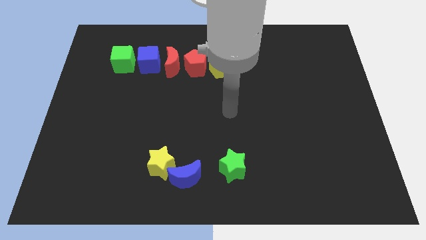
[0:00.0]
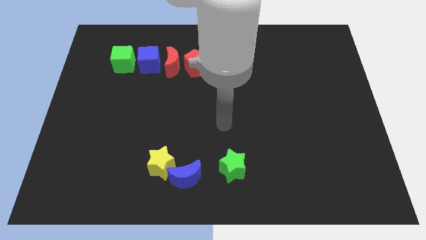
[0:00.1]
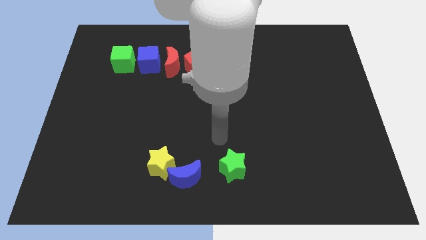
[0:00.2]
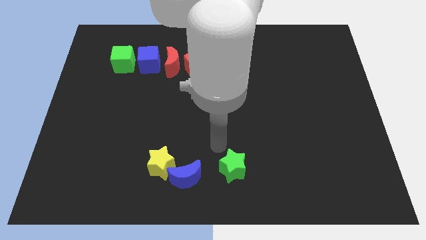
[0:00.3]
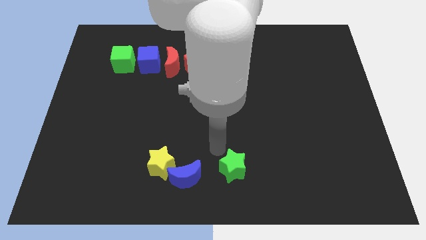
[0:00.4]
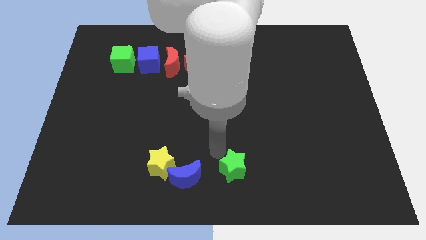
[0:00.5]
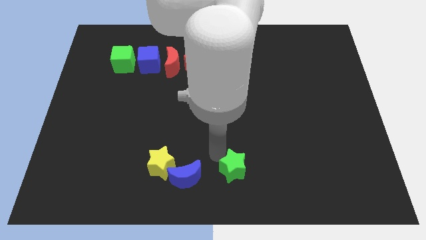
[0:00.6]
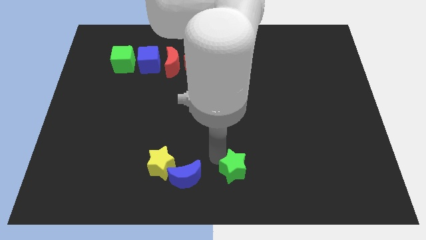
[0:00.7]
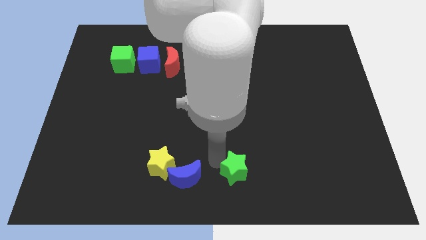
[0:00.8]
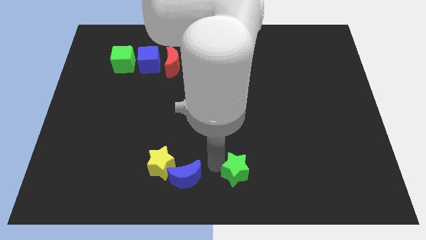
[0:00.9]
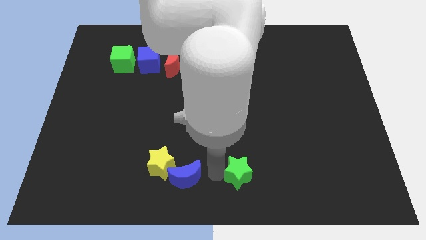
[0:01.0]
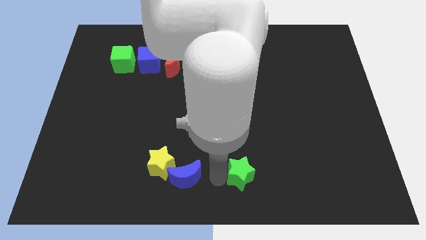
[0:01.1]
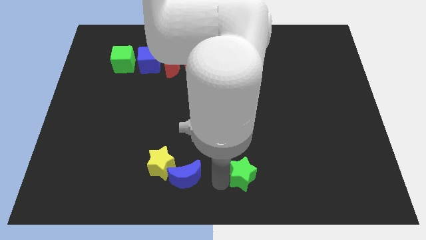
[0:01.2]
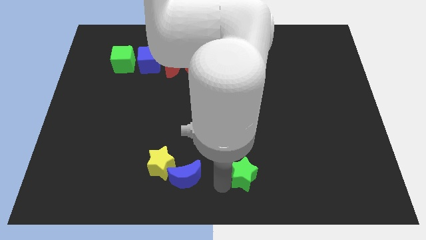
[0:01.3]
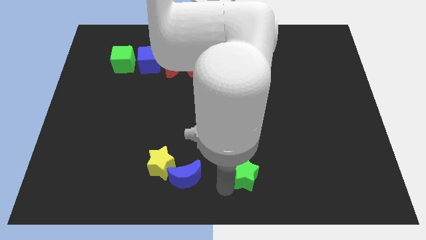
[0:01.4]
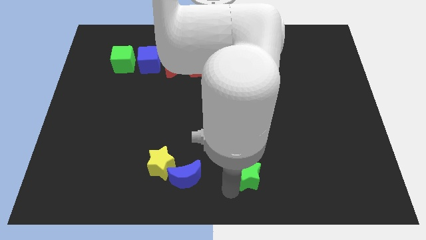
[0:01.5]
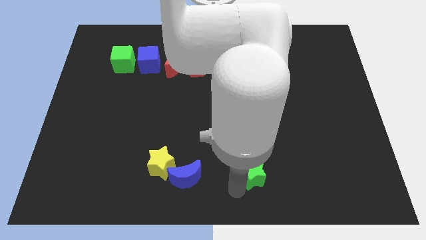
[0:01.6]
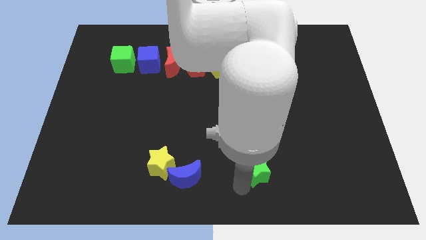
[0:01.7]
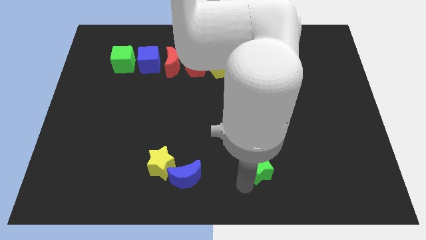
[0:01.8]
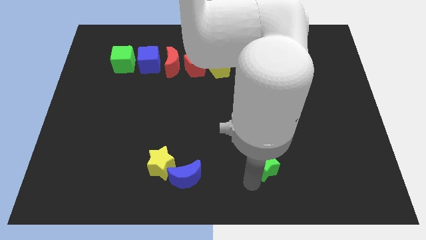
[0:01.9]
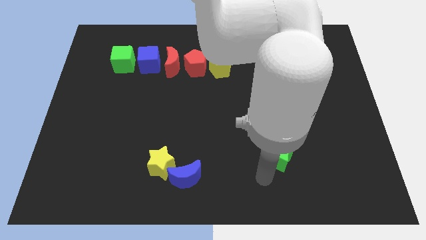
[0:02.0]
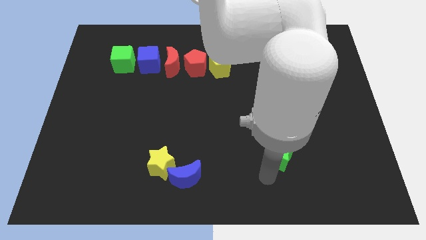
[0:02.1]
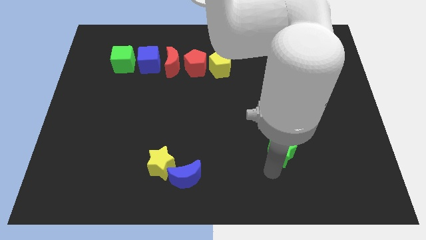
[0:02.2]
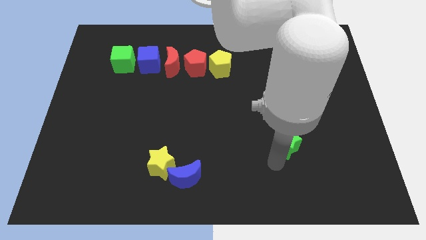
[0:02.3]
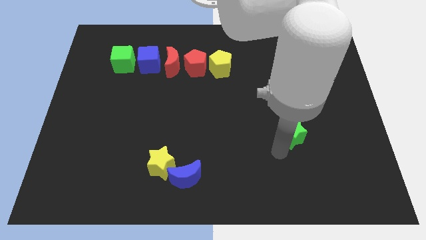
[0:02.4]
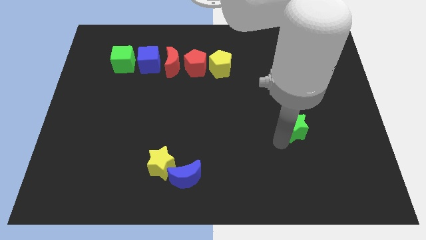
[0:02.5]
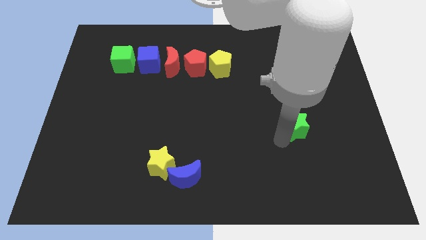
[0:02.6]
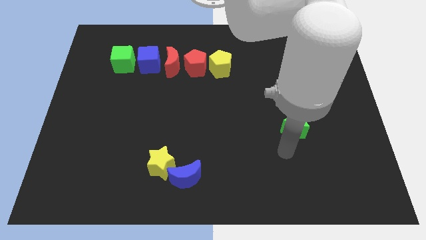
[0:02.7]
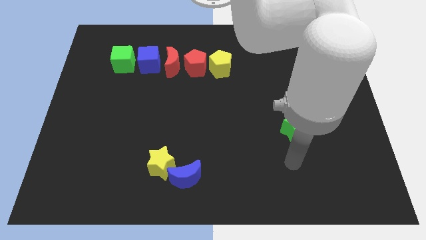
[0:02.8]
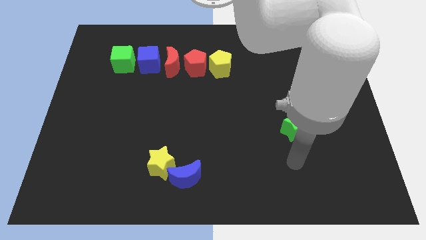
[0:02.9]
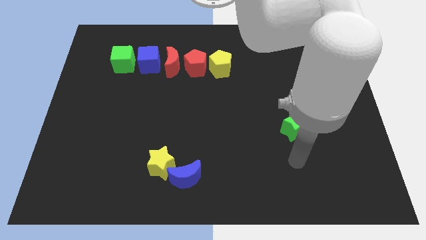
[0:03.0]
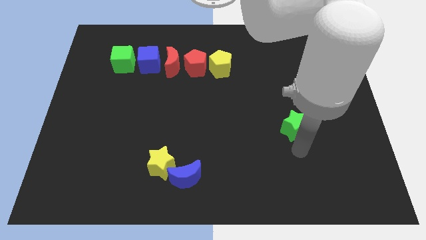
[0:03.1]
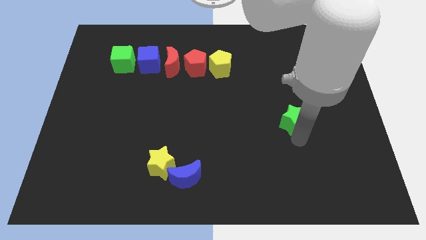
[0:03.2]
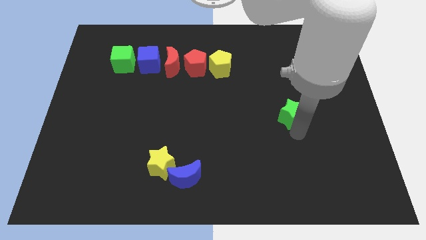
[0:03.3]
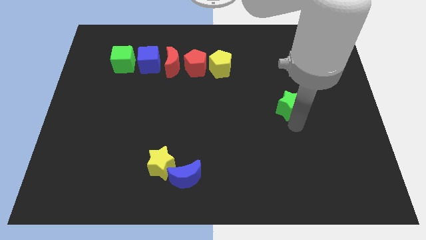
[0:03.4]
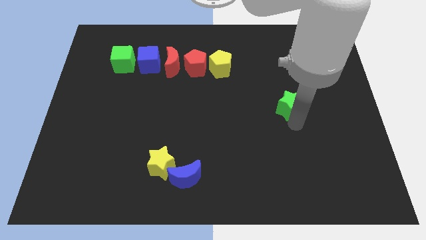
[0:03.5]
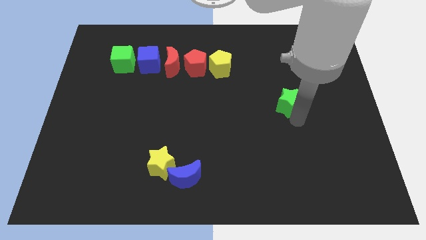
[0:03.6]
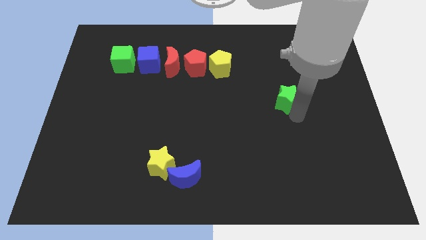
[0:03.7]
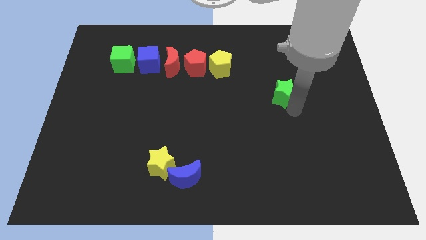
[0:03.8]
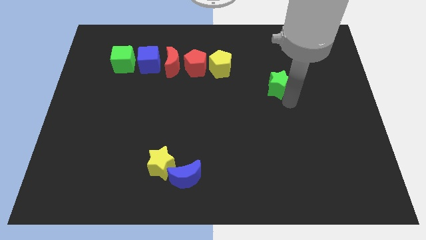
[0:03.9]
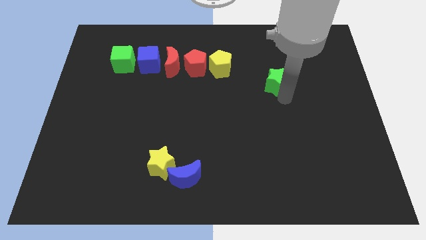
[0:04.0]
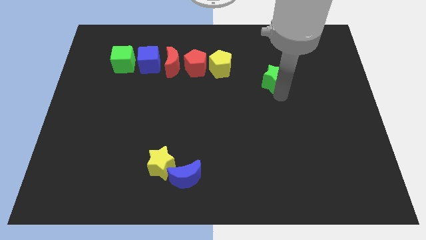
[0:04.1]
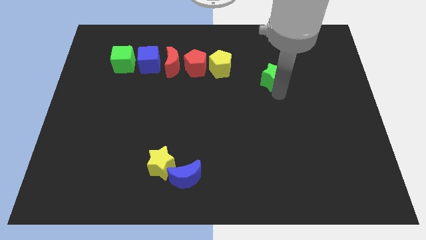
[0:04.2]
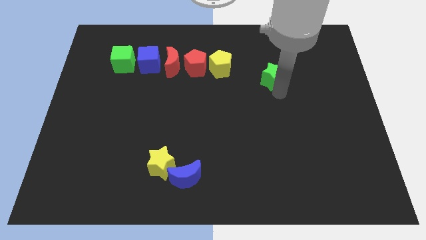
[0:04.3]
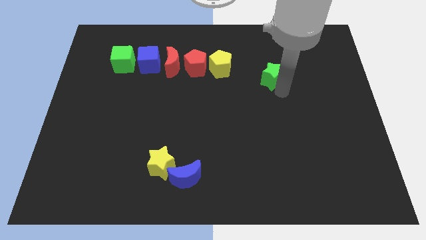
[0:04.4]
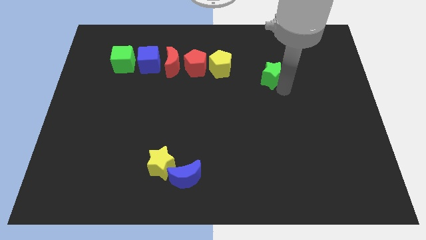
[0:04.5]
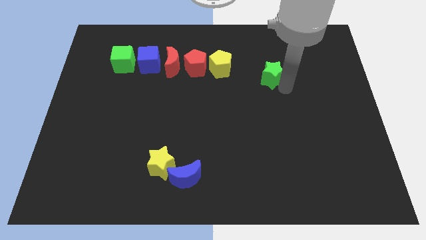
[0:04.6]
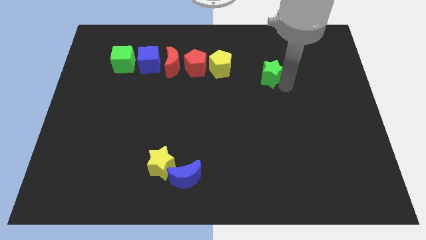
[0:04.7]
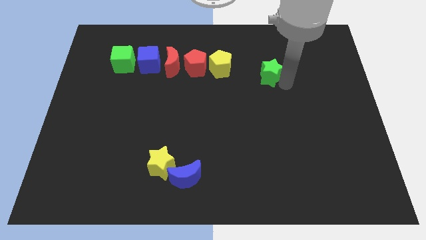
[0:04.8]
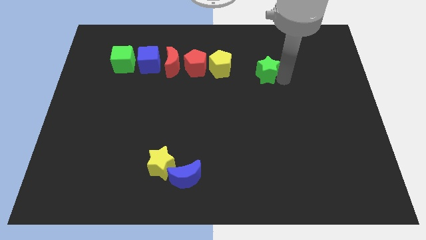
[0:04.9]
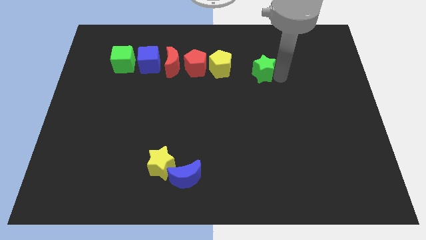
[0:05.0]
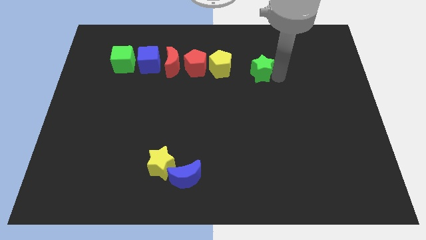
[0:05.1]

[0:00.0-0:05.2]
push green star towards the yellow pentagon

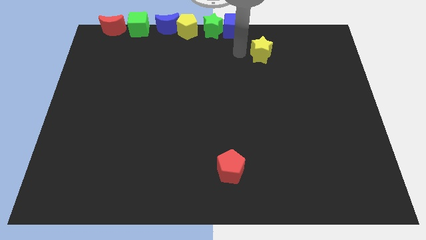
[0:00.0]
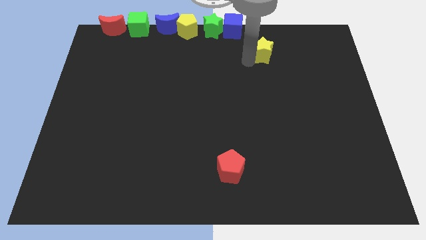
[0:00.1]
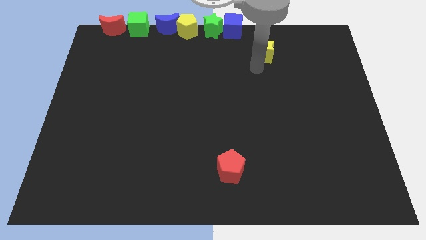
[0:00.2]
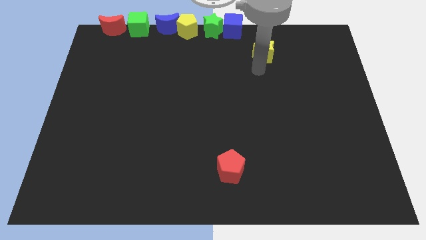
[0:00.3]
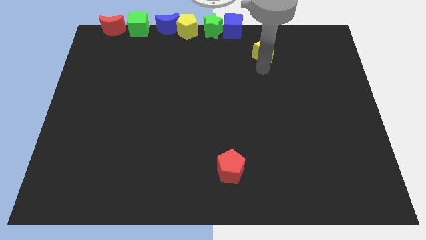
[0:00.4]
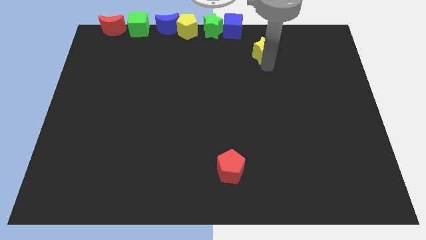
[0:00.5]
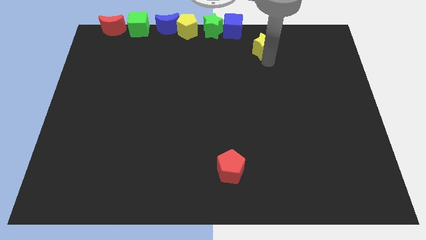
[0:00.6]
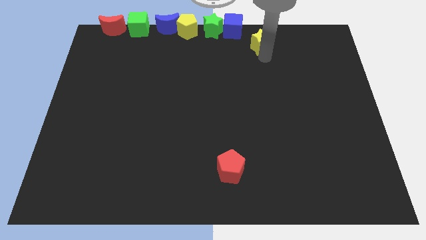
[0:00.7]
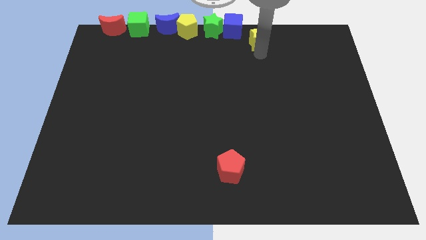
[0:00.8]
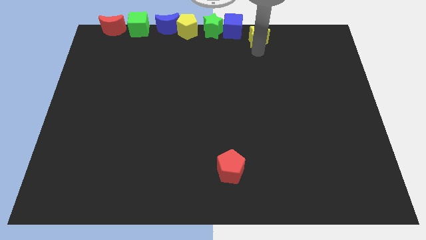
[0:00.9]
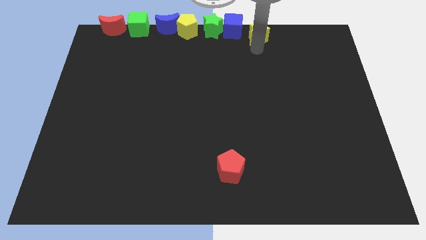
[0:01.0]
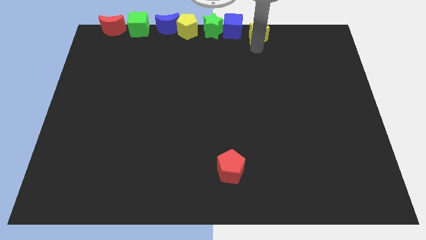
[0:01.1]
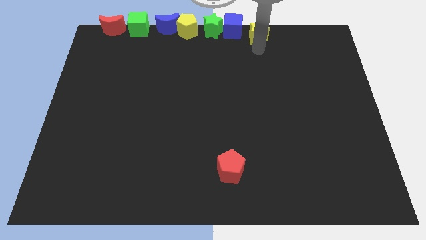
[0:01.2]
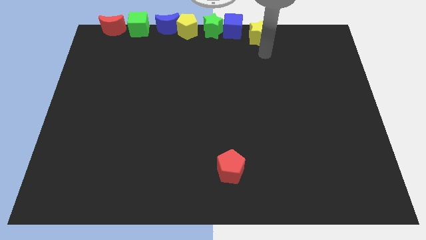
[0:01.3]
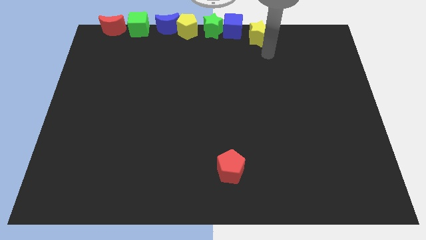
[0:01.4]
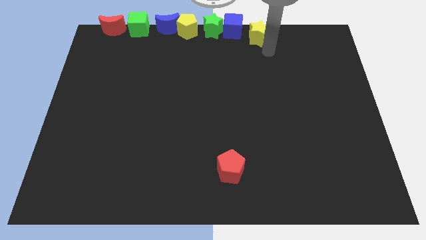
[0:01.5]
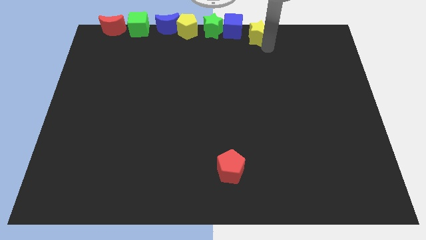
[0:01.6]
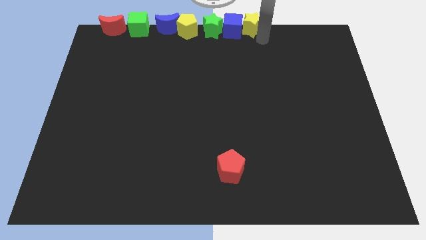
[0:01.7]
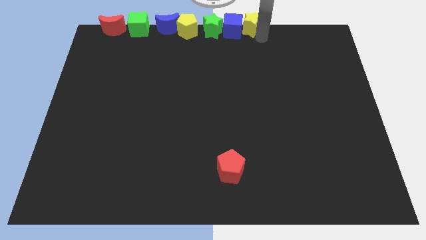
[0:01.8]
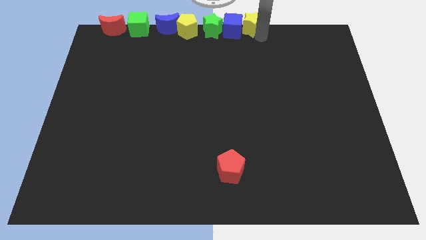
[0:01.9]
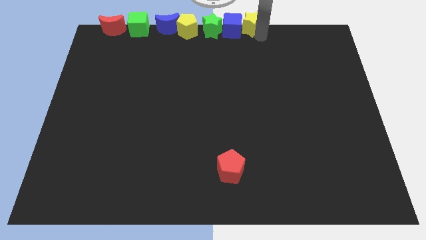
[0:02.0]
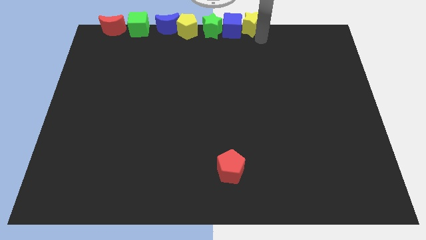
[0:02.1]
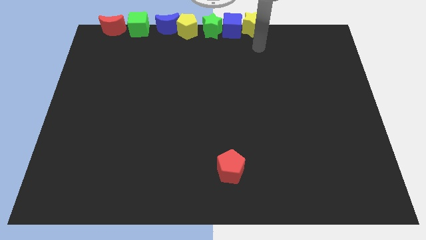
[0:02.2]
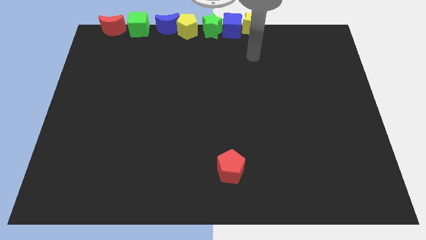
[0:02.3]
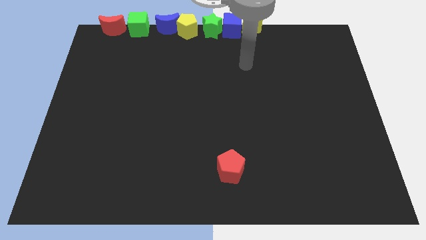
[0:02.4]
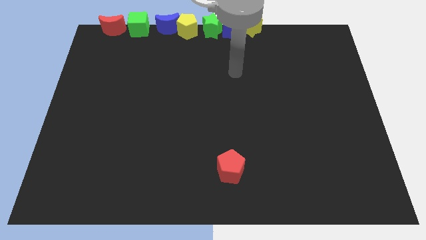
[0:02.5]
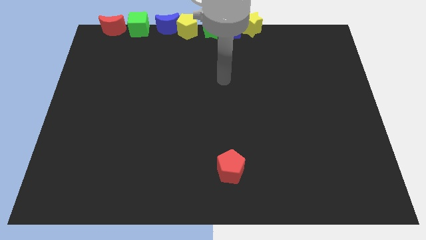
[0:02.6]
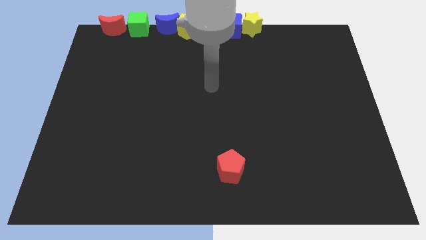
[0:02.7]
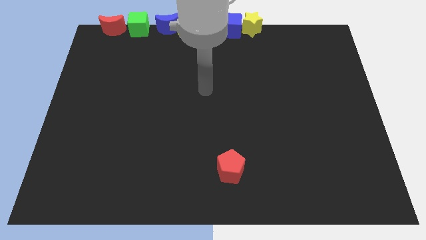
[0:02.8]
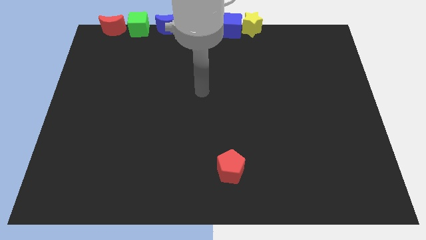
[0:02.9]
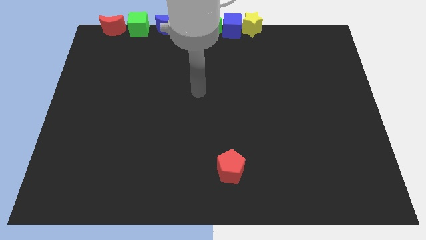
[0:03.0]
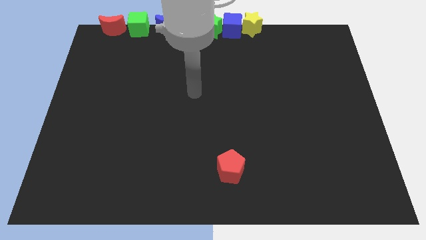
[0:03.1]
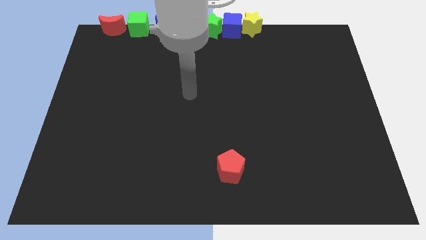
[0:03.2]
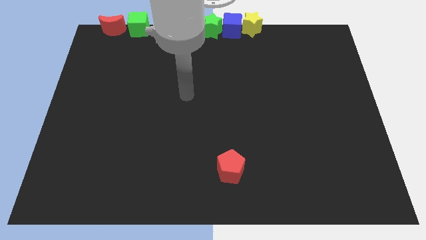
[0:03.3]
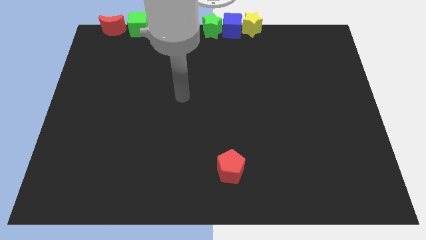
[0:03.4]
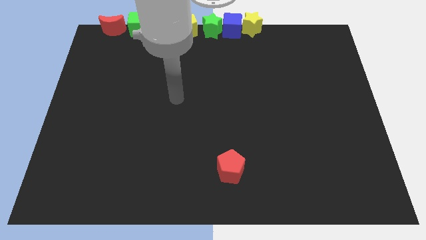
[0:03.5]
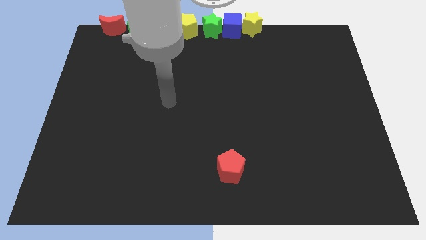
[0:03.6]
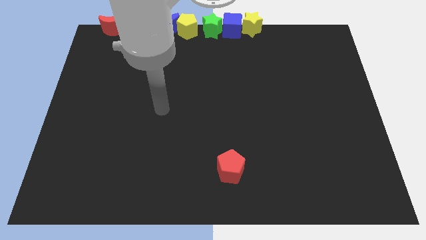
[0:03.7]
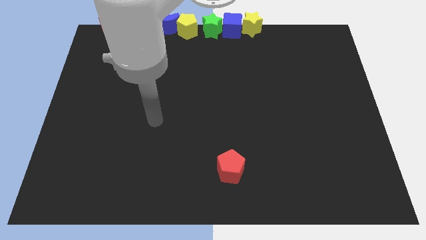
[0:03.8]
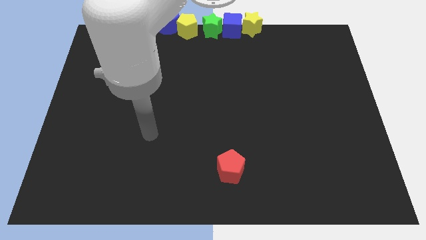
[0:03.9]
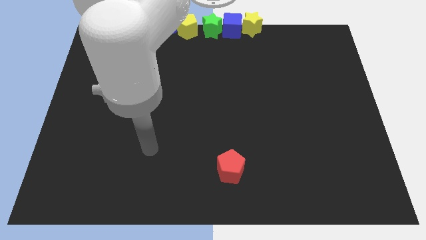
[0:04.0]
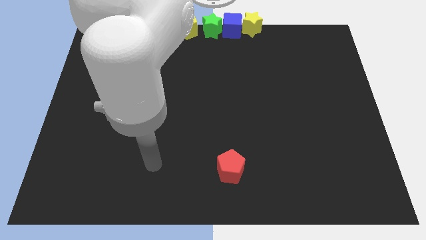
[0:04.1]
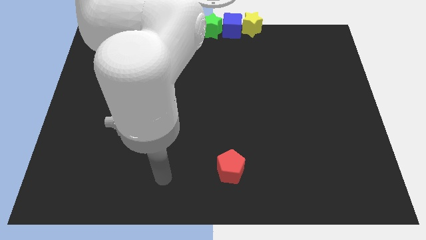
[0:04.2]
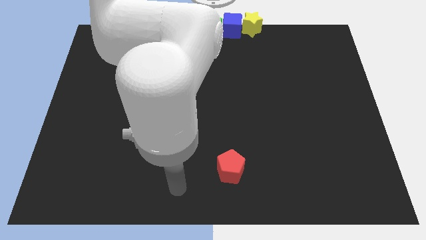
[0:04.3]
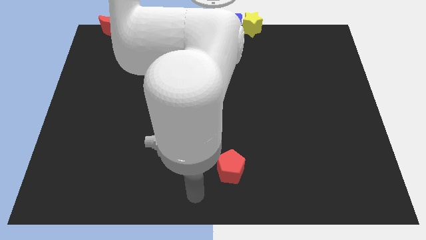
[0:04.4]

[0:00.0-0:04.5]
move the yellow star to the right side of the blue cube
